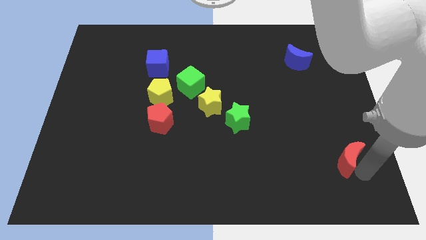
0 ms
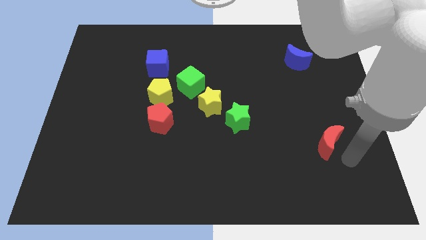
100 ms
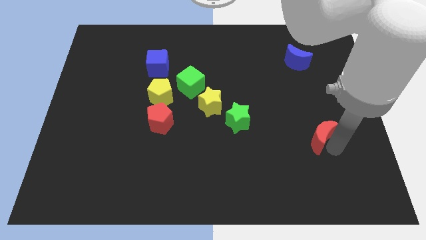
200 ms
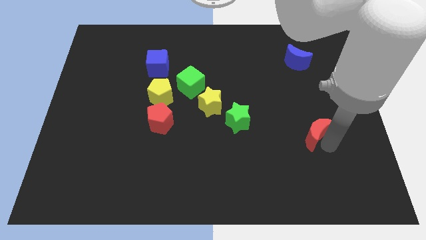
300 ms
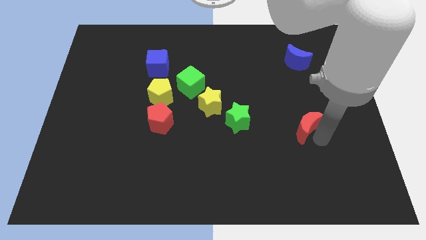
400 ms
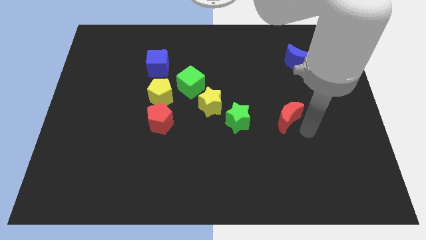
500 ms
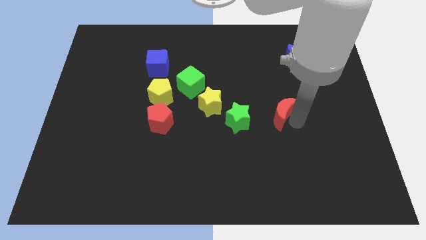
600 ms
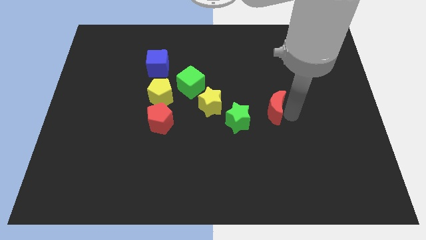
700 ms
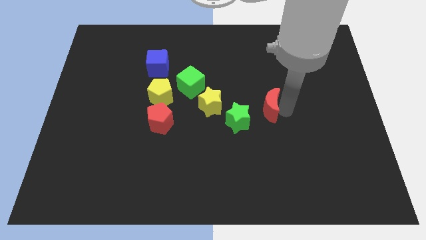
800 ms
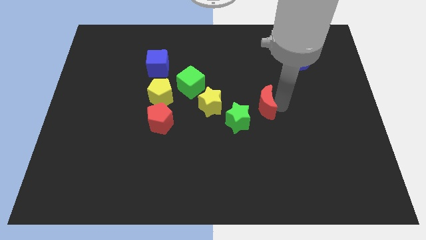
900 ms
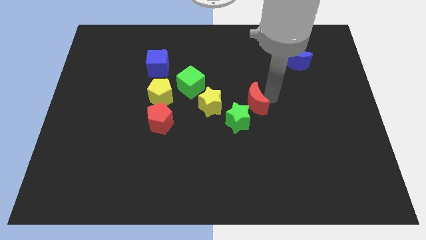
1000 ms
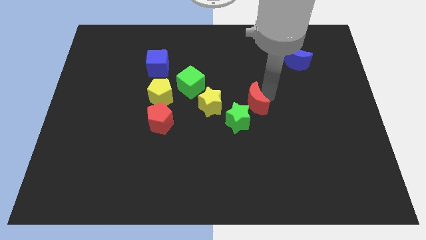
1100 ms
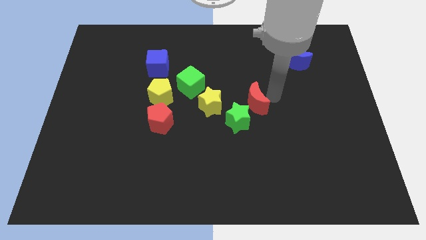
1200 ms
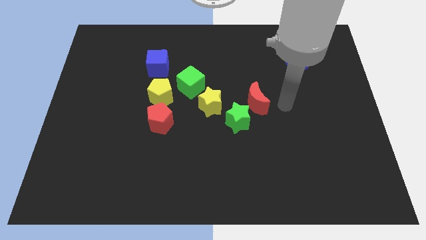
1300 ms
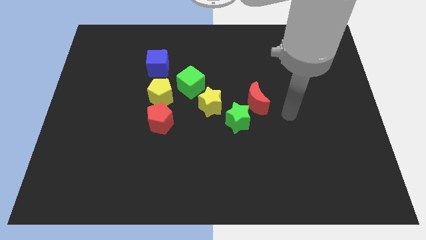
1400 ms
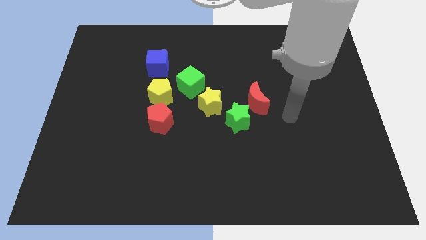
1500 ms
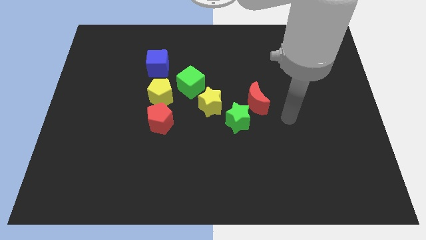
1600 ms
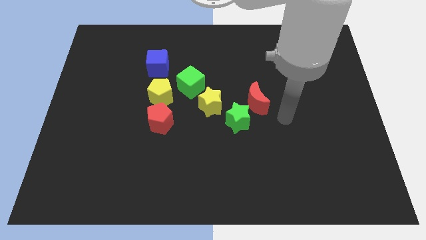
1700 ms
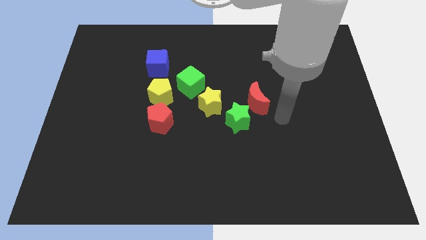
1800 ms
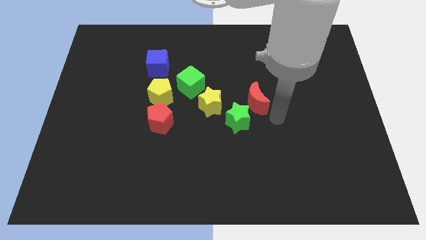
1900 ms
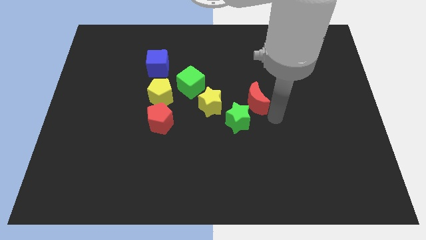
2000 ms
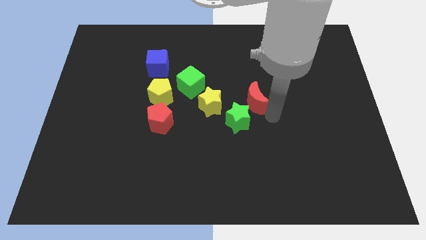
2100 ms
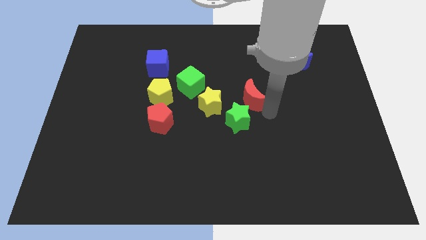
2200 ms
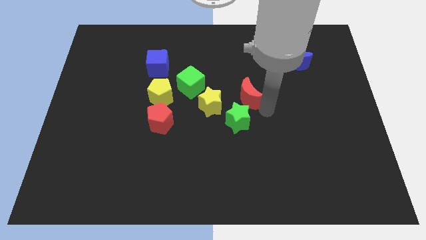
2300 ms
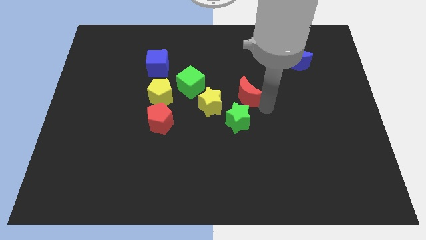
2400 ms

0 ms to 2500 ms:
move the red crescent to the right side of the yellow star

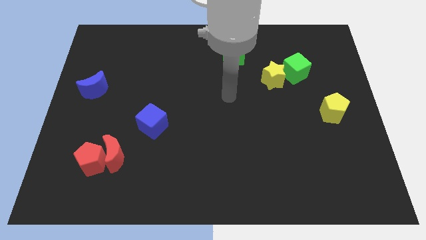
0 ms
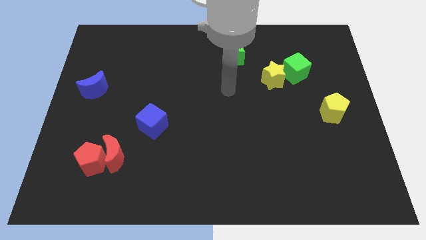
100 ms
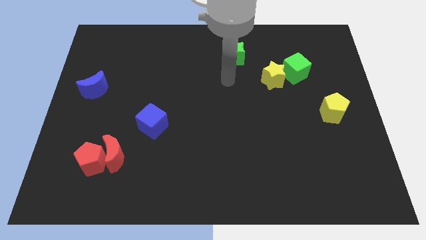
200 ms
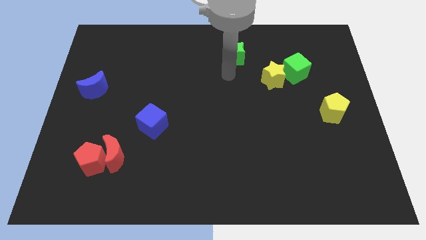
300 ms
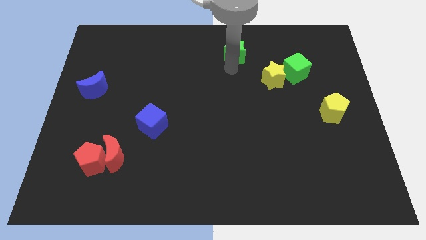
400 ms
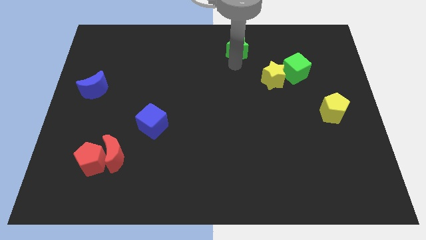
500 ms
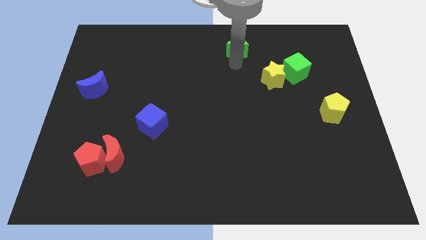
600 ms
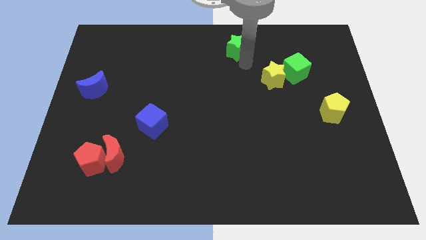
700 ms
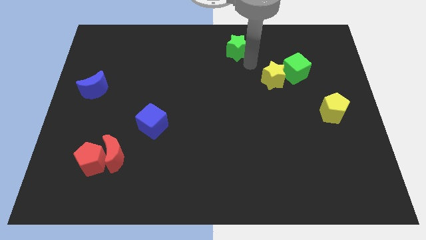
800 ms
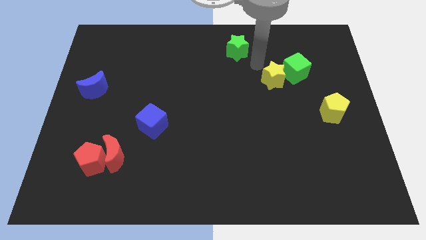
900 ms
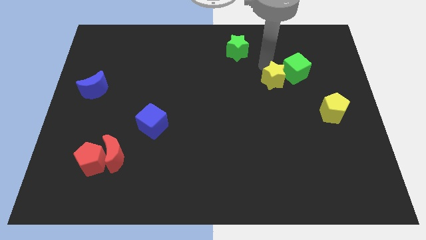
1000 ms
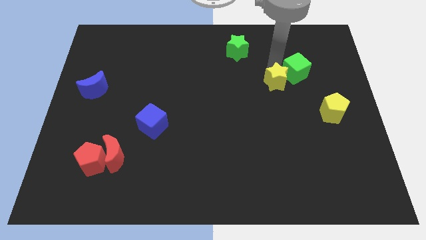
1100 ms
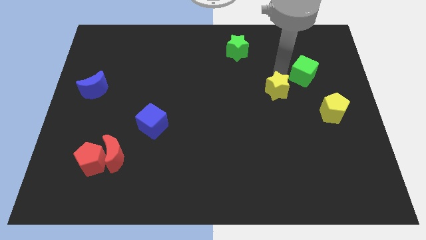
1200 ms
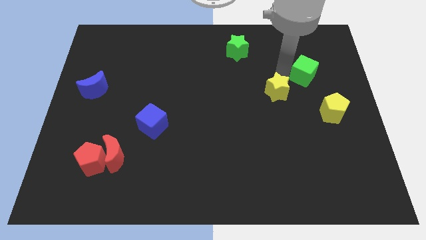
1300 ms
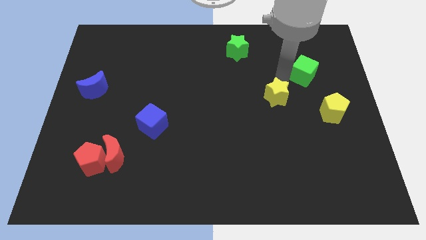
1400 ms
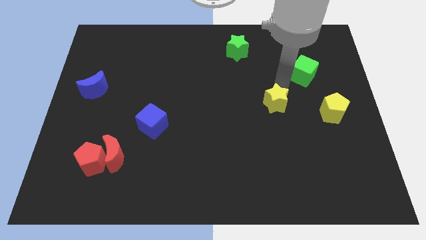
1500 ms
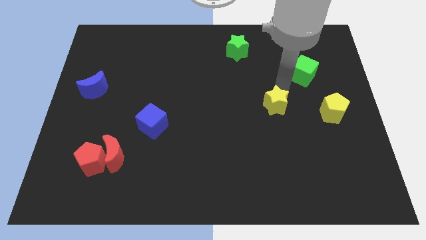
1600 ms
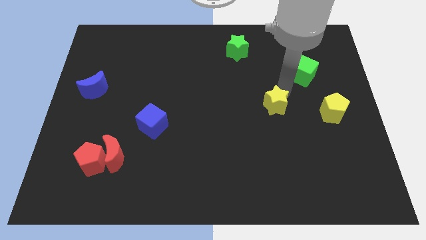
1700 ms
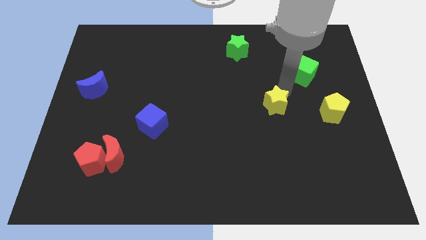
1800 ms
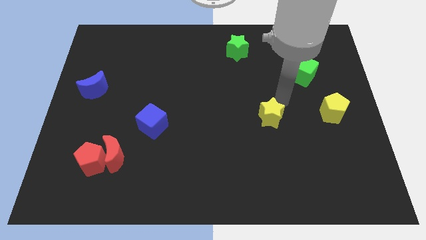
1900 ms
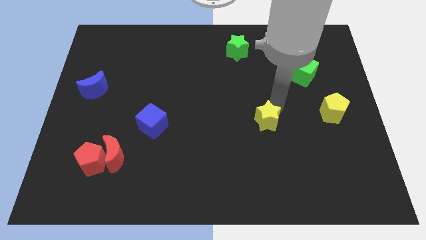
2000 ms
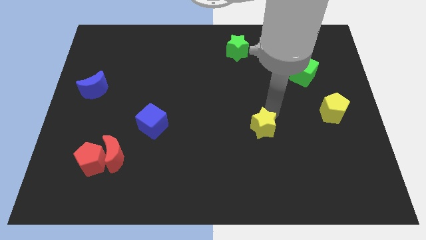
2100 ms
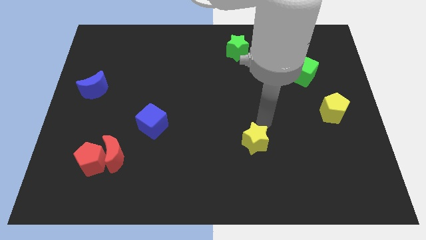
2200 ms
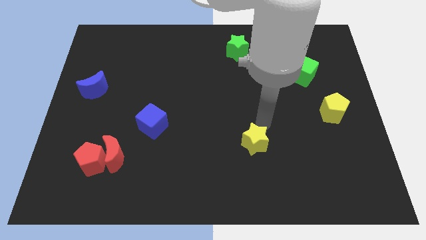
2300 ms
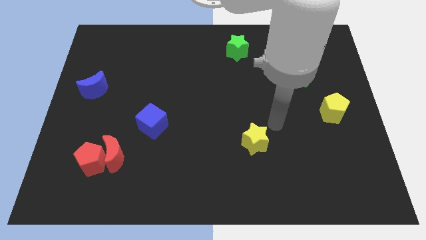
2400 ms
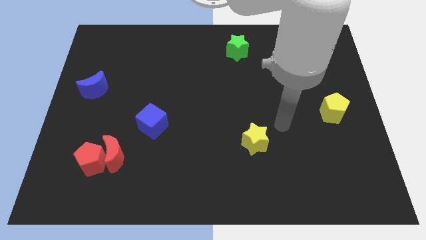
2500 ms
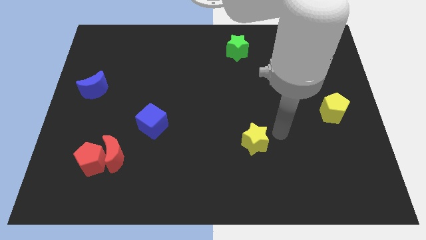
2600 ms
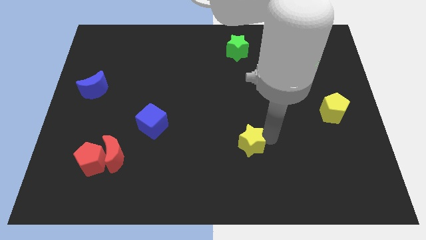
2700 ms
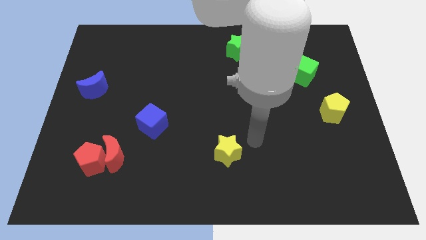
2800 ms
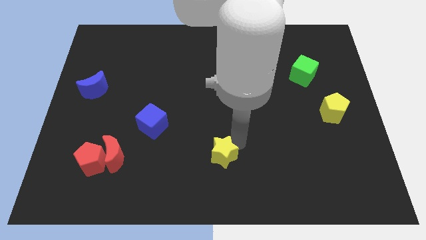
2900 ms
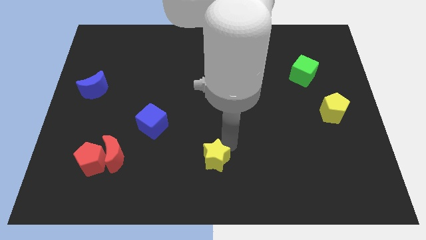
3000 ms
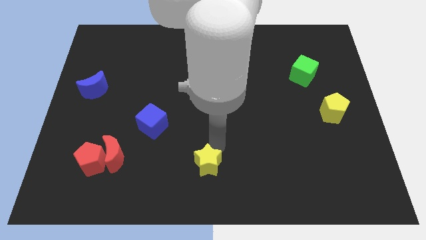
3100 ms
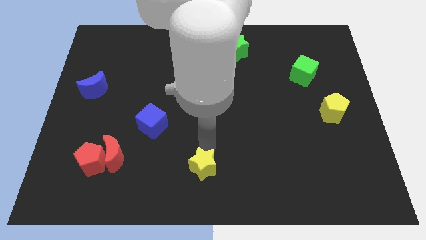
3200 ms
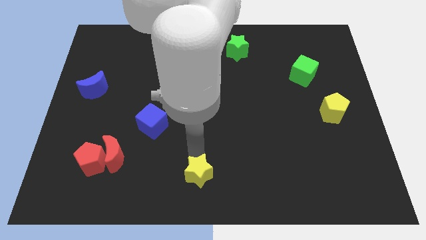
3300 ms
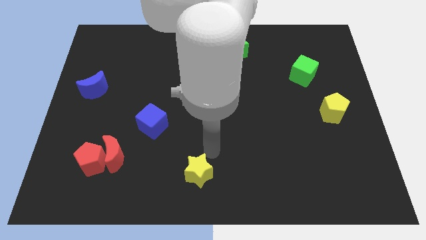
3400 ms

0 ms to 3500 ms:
move yellow star towards bottom center of the board

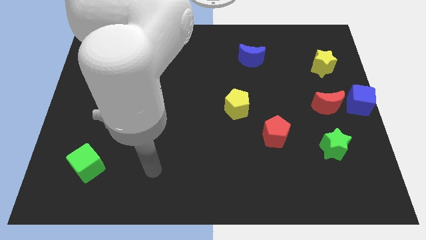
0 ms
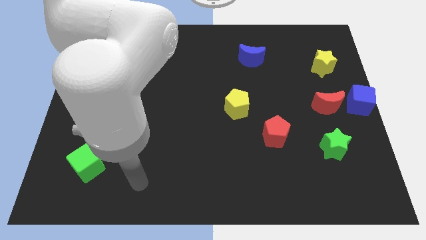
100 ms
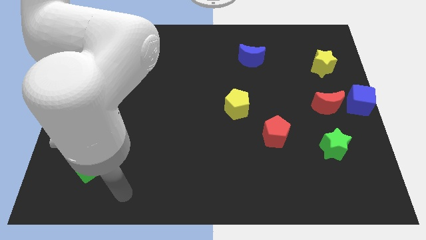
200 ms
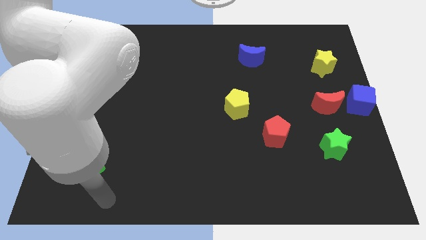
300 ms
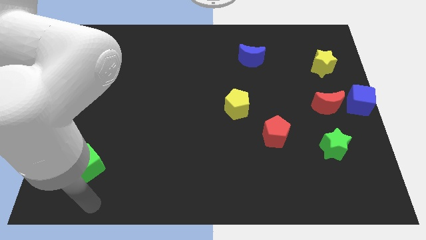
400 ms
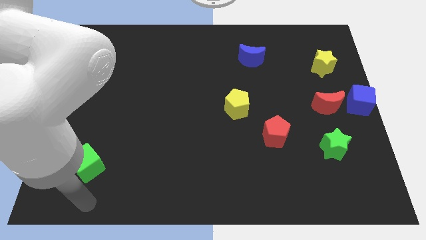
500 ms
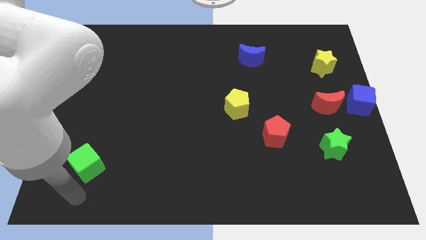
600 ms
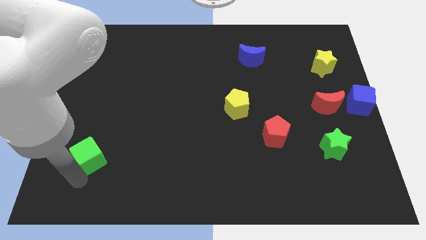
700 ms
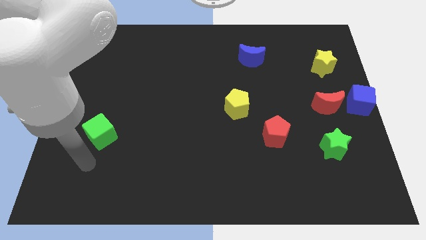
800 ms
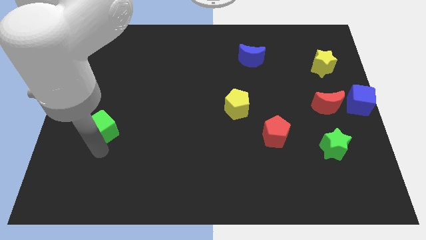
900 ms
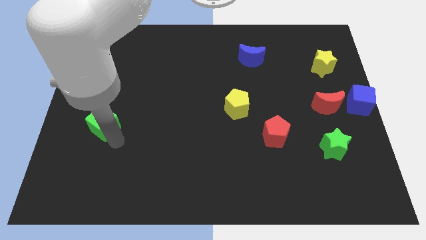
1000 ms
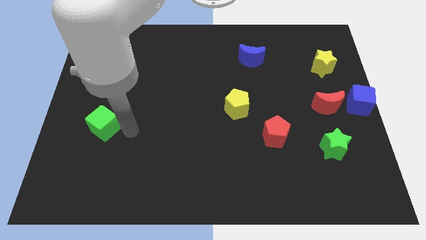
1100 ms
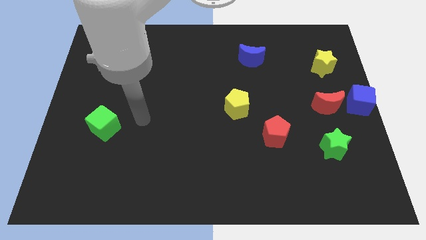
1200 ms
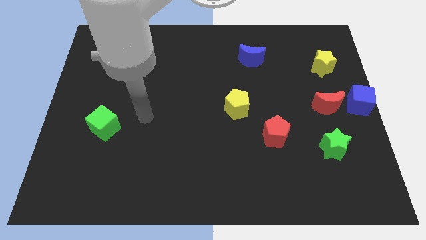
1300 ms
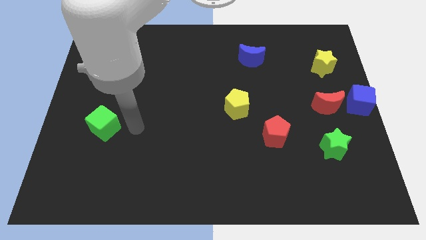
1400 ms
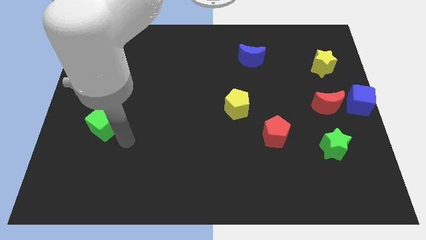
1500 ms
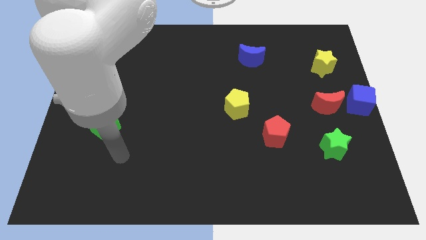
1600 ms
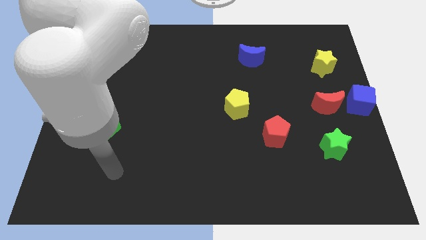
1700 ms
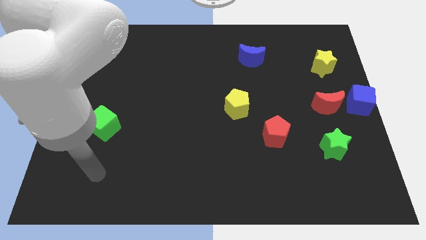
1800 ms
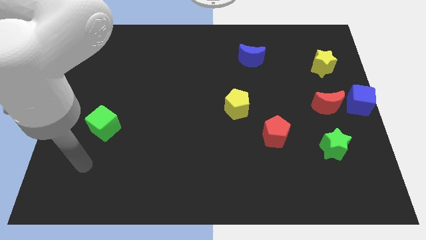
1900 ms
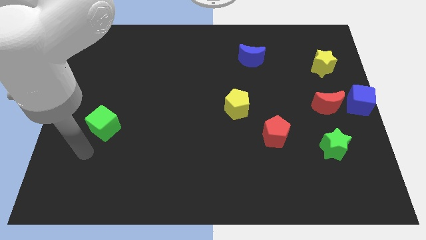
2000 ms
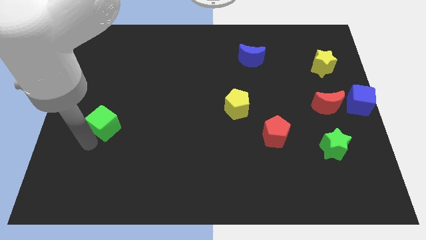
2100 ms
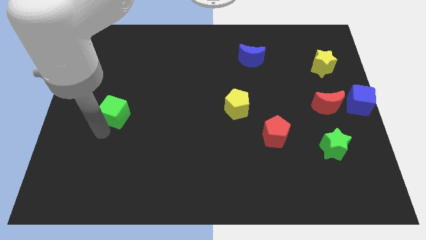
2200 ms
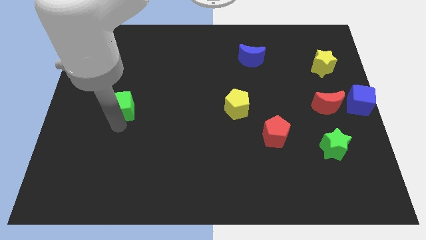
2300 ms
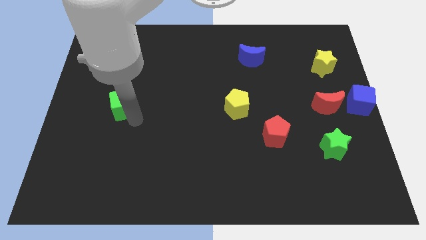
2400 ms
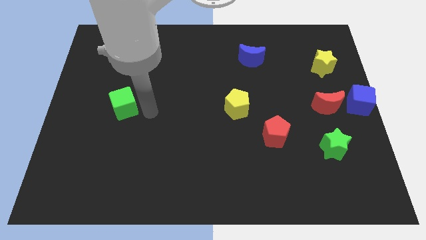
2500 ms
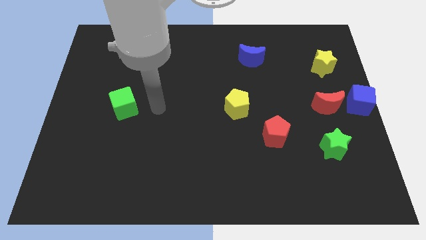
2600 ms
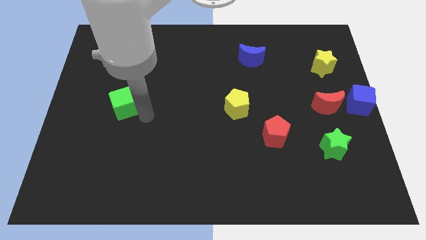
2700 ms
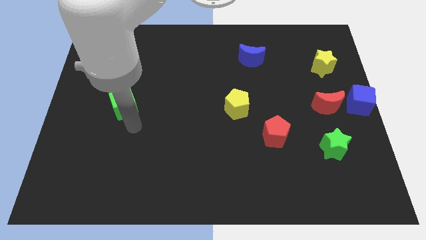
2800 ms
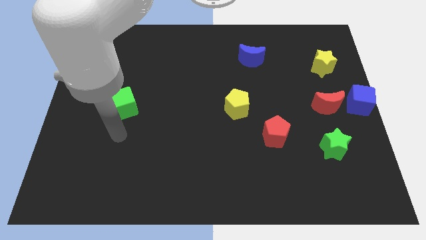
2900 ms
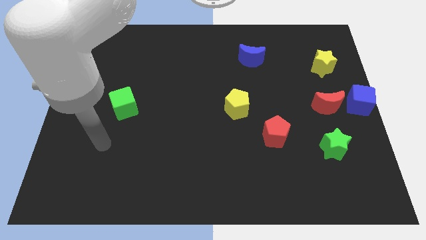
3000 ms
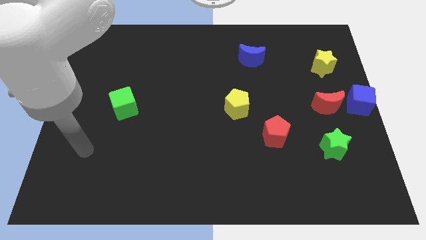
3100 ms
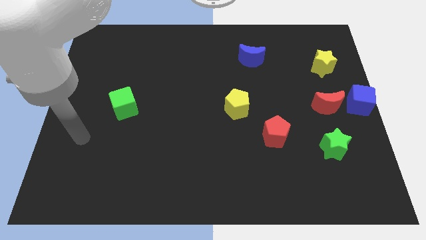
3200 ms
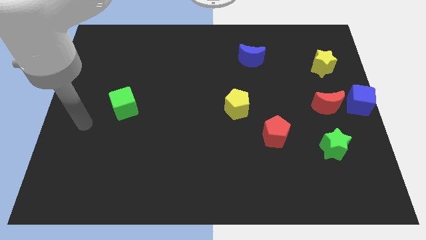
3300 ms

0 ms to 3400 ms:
place the green cube left to the yellow pentagon to form a horizontal line
